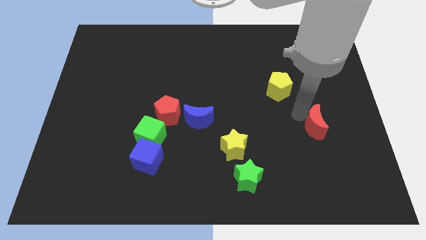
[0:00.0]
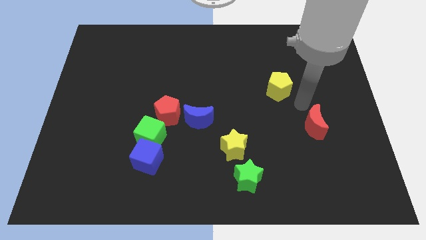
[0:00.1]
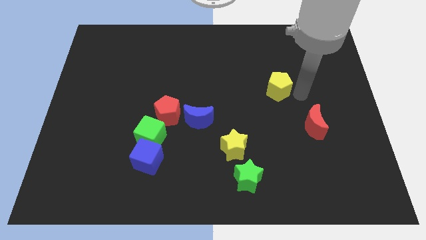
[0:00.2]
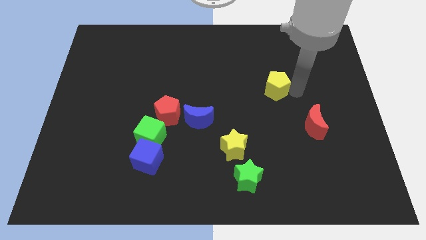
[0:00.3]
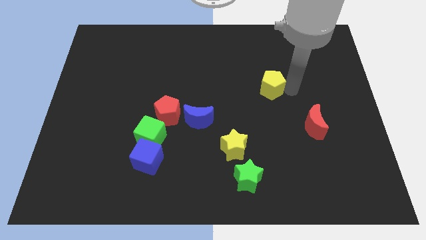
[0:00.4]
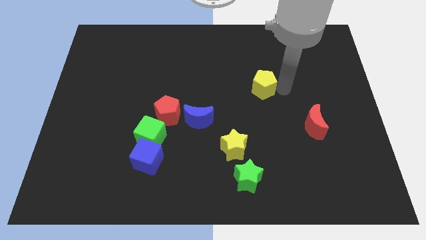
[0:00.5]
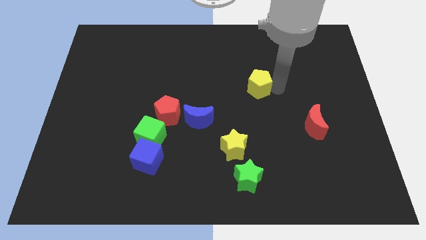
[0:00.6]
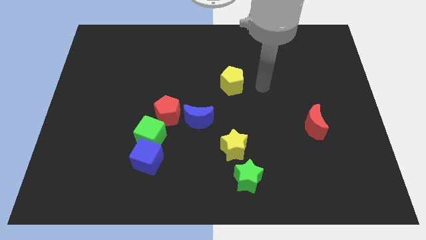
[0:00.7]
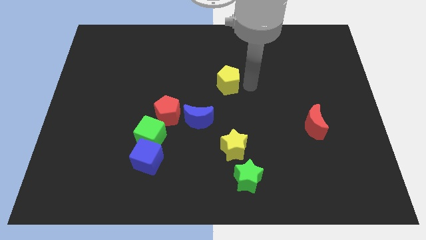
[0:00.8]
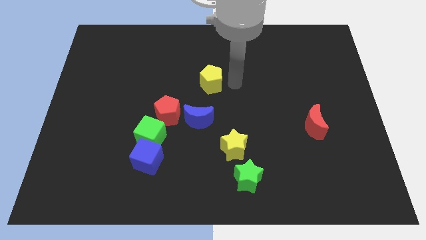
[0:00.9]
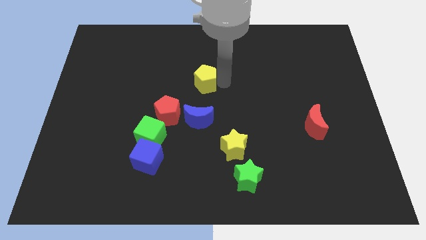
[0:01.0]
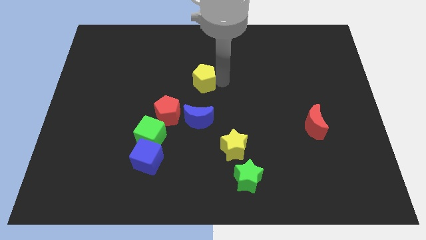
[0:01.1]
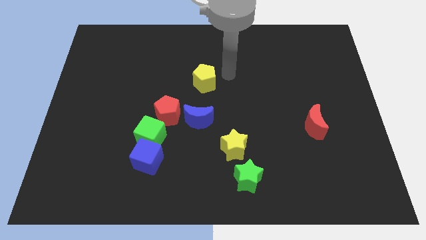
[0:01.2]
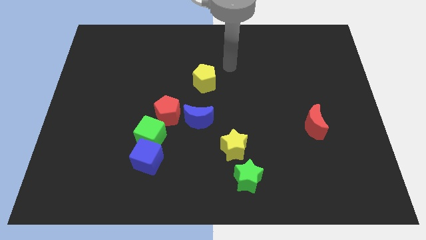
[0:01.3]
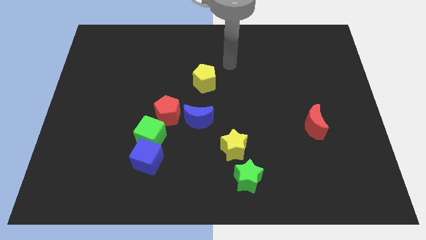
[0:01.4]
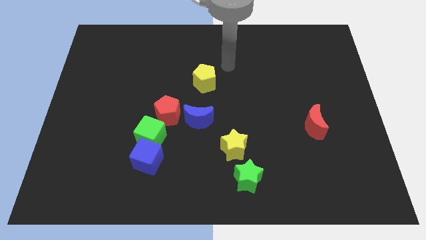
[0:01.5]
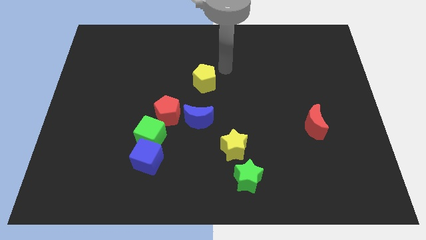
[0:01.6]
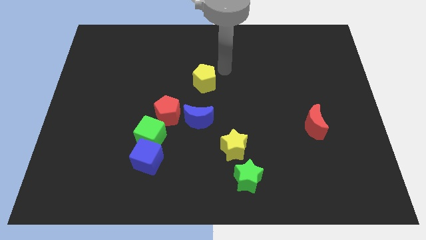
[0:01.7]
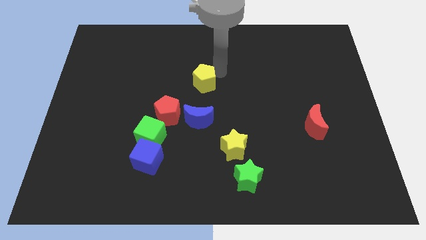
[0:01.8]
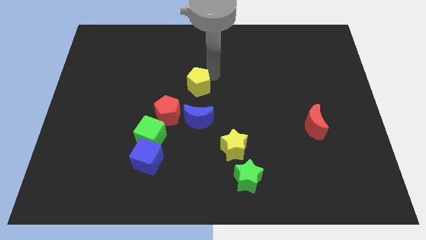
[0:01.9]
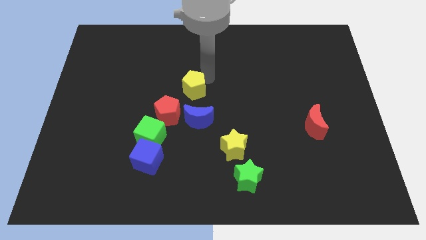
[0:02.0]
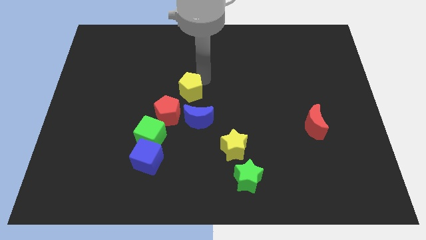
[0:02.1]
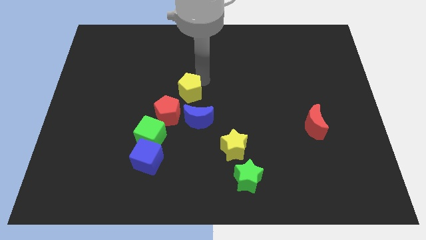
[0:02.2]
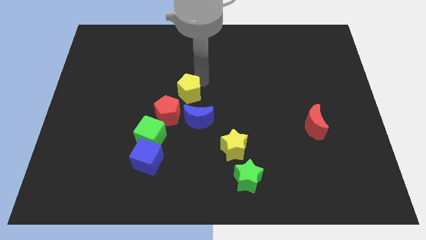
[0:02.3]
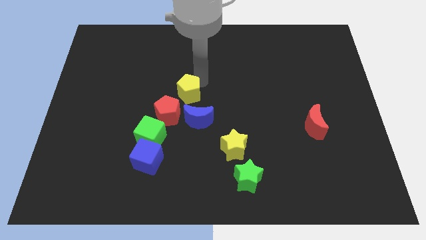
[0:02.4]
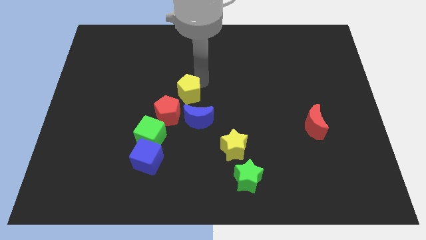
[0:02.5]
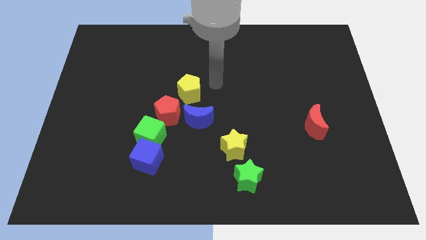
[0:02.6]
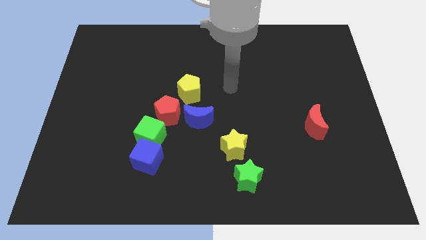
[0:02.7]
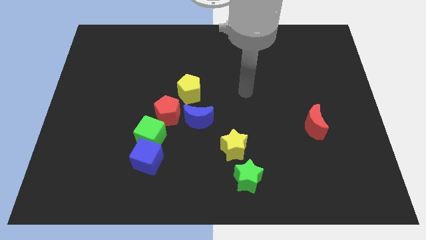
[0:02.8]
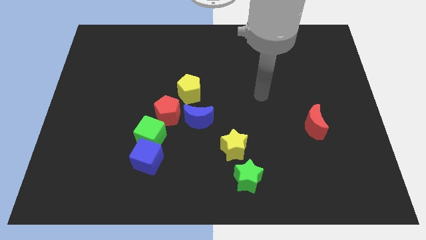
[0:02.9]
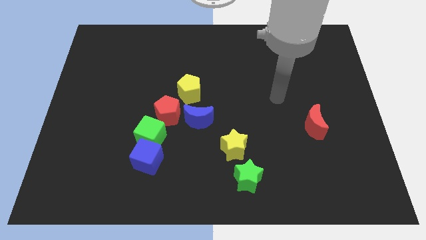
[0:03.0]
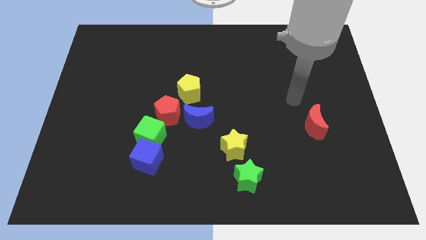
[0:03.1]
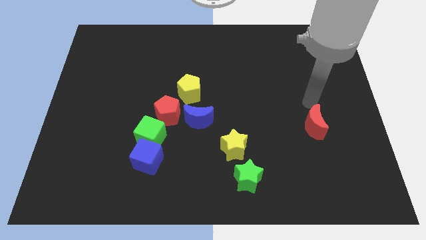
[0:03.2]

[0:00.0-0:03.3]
put the yellow pentagon diadonally top right side of red pentagon

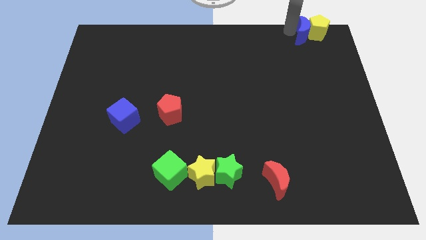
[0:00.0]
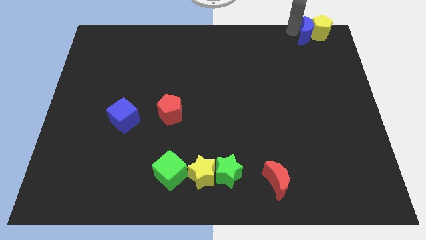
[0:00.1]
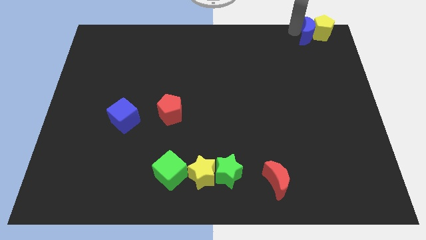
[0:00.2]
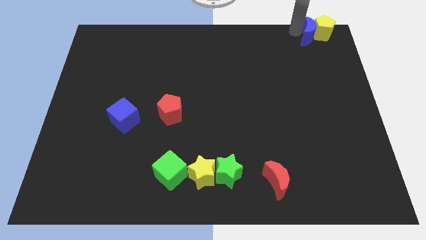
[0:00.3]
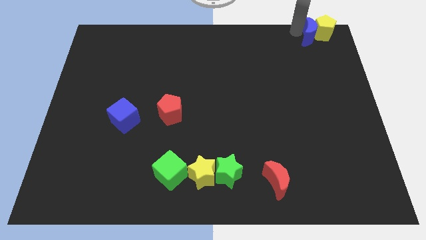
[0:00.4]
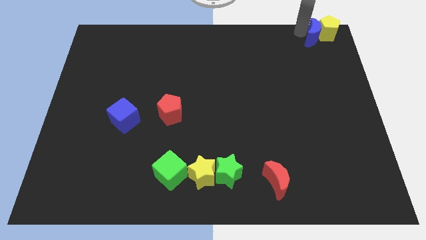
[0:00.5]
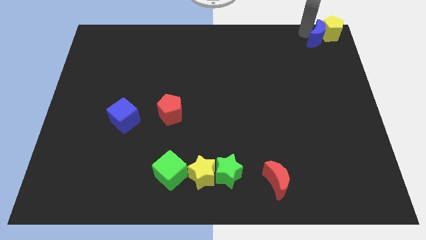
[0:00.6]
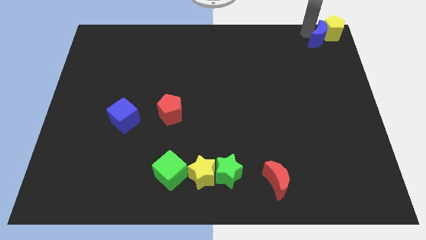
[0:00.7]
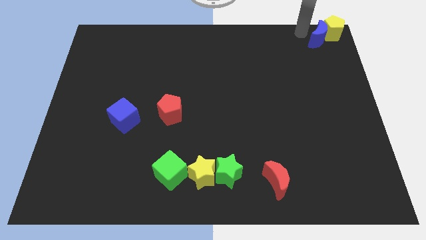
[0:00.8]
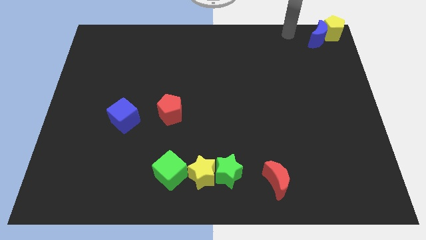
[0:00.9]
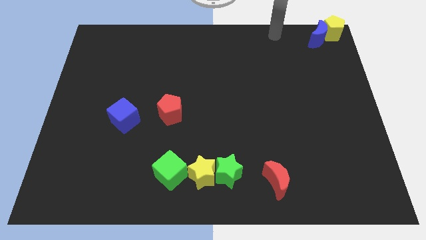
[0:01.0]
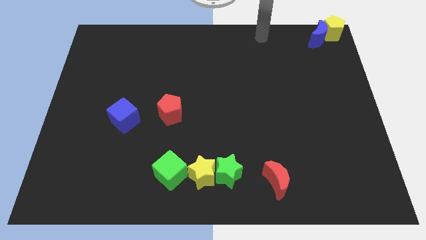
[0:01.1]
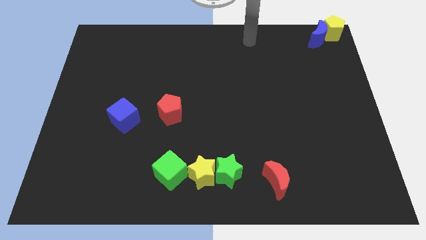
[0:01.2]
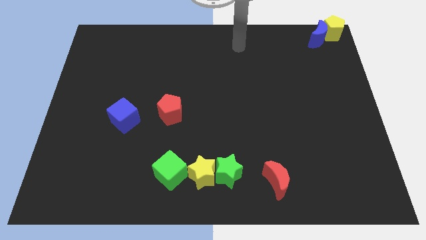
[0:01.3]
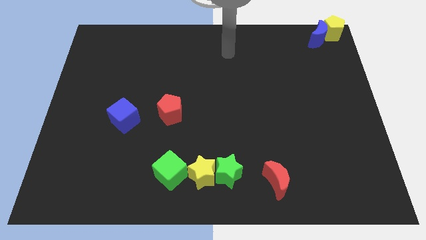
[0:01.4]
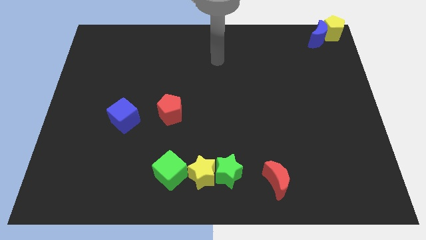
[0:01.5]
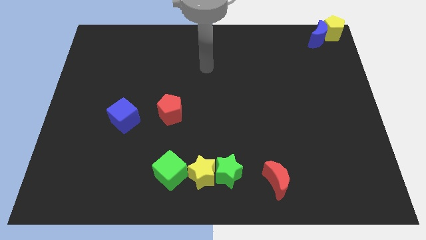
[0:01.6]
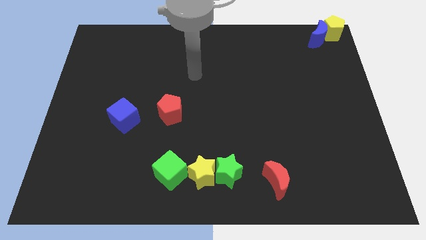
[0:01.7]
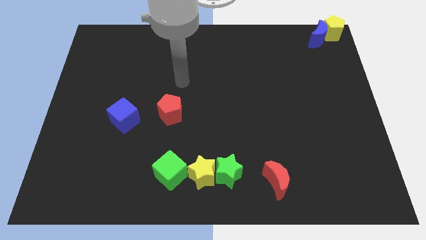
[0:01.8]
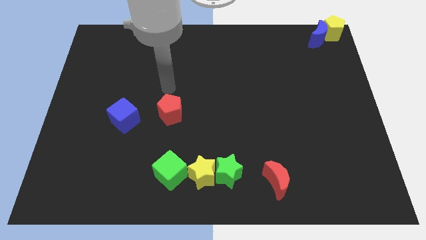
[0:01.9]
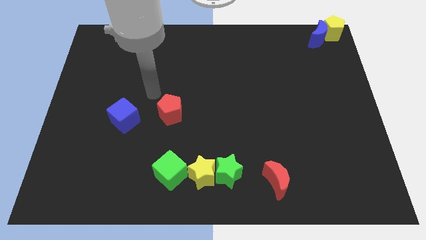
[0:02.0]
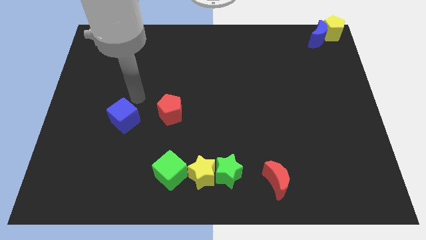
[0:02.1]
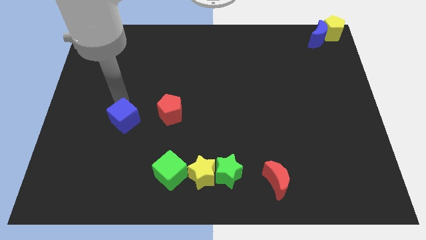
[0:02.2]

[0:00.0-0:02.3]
place the arm above the blue cube

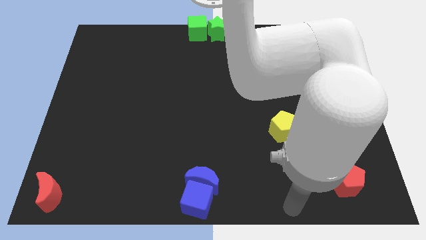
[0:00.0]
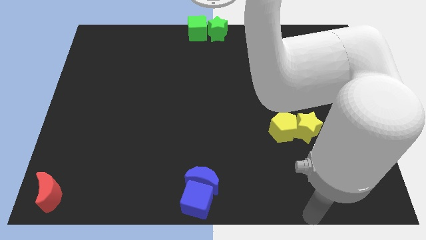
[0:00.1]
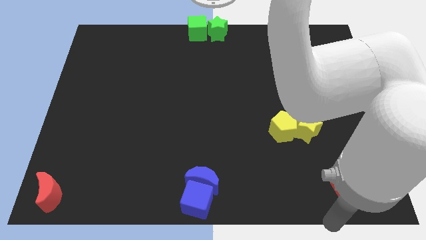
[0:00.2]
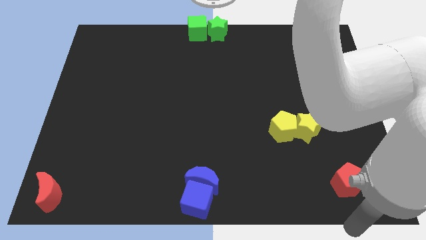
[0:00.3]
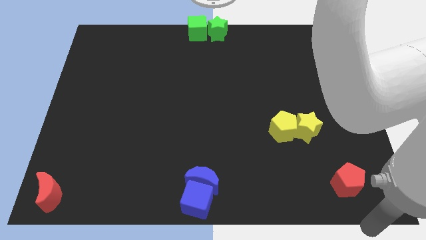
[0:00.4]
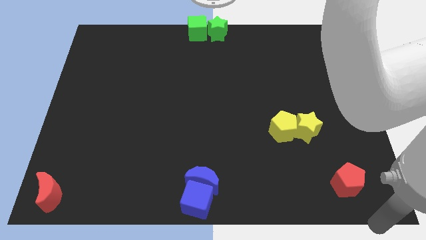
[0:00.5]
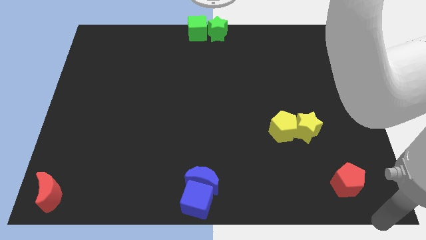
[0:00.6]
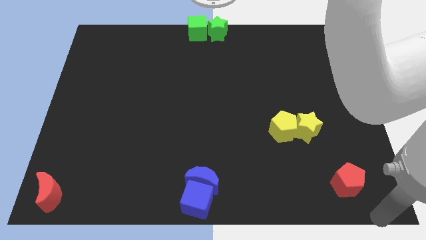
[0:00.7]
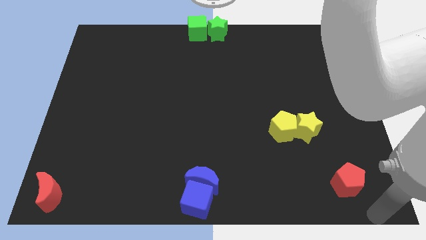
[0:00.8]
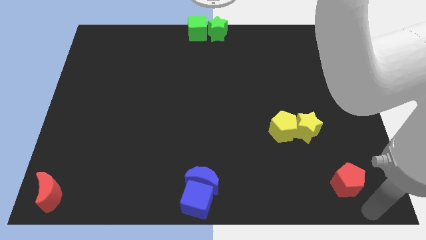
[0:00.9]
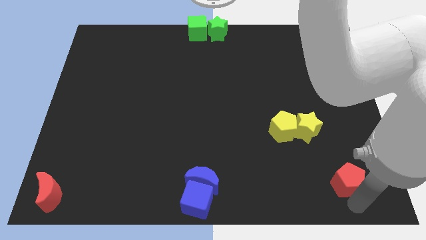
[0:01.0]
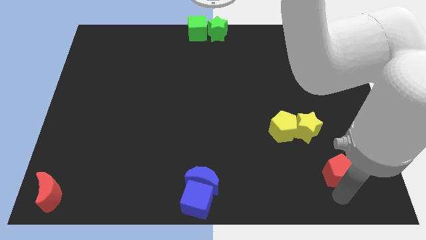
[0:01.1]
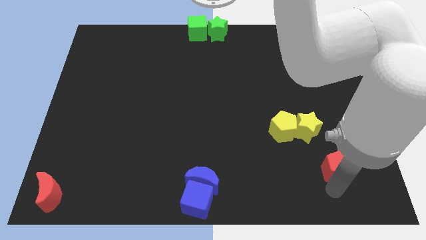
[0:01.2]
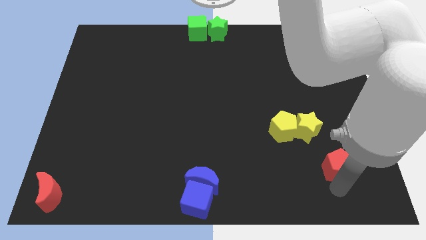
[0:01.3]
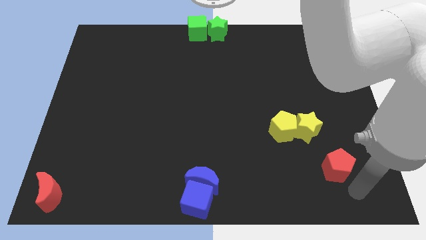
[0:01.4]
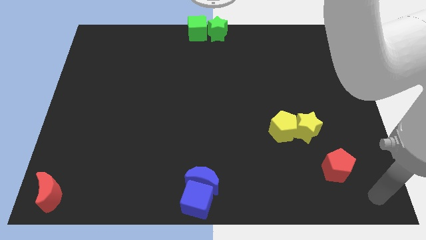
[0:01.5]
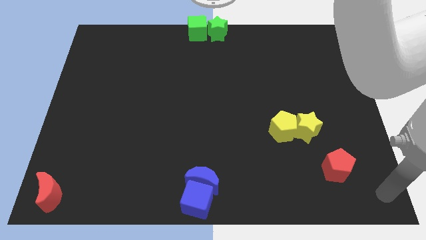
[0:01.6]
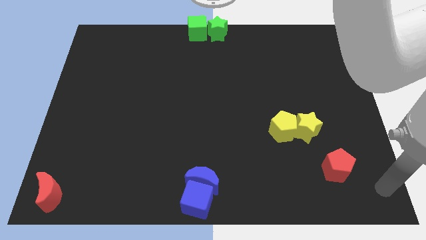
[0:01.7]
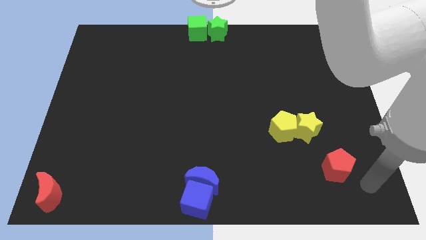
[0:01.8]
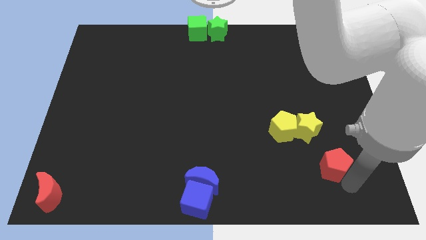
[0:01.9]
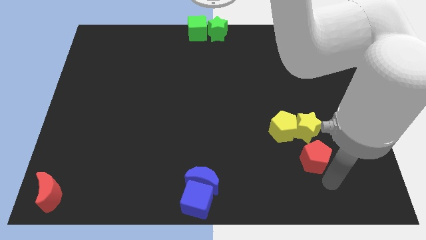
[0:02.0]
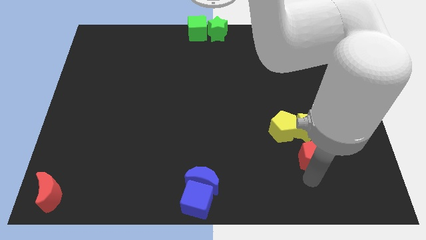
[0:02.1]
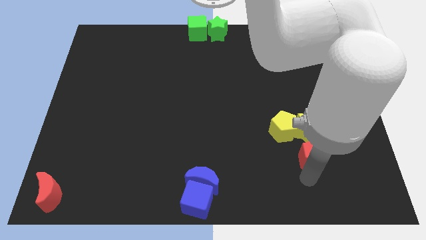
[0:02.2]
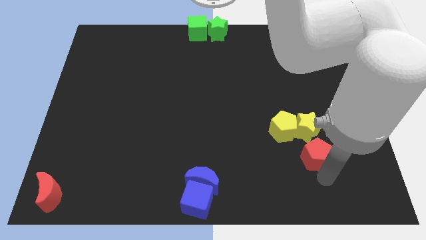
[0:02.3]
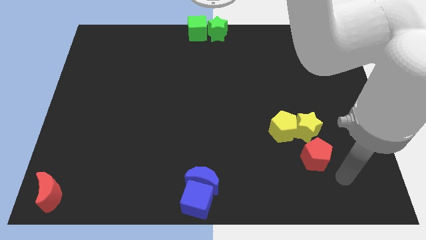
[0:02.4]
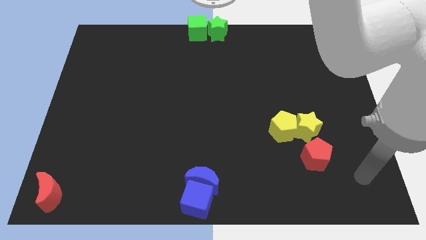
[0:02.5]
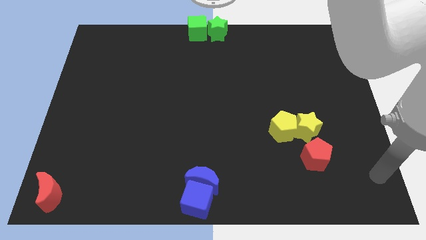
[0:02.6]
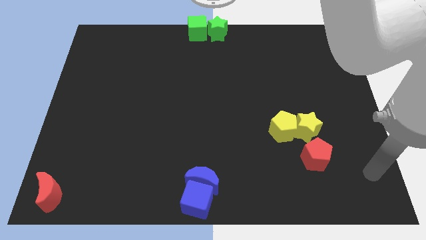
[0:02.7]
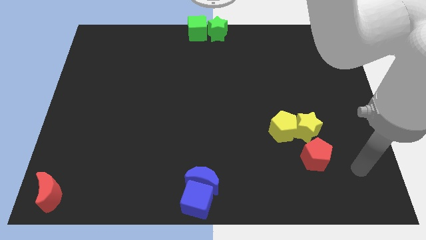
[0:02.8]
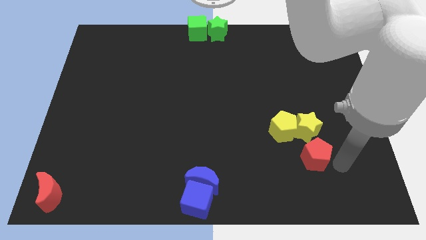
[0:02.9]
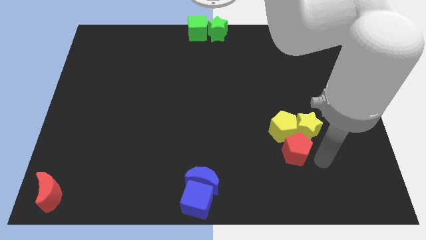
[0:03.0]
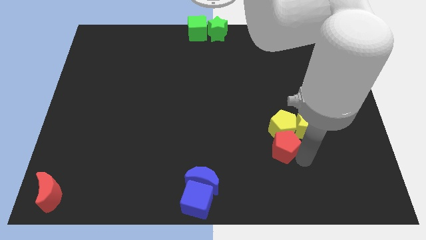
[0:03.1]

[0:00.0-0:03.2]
push red pentagon below yellow pentagon
